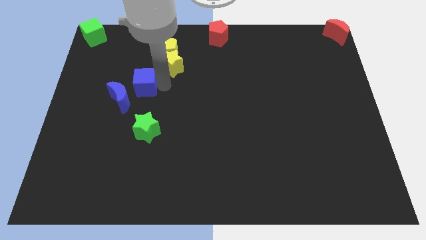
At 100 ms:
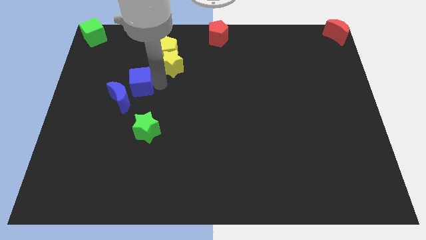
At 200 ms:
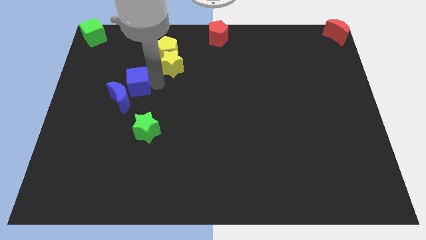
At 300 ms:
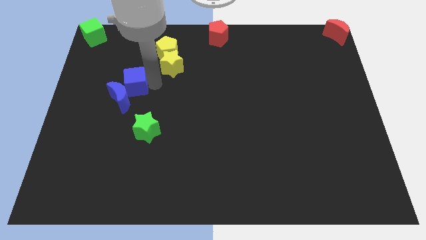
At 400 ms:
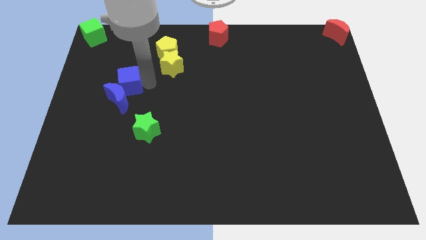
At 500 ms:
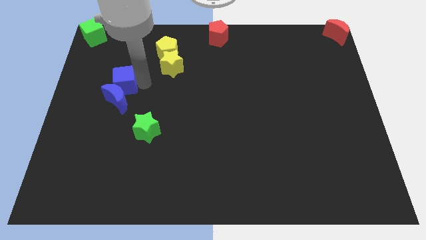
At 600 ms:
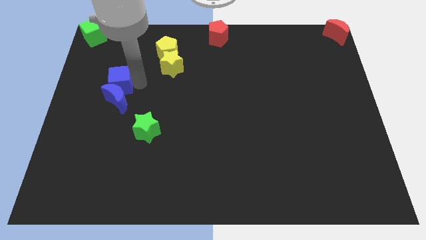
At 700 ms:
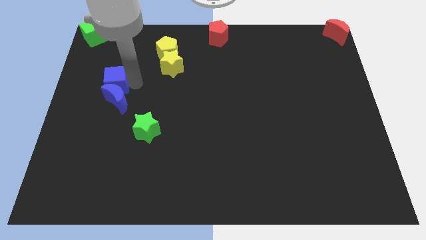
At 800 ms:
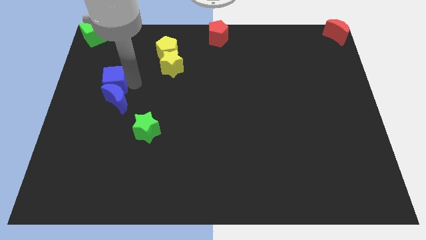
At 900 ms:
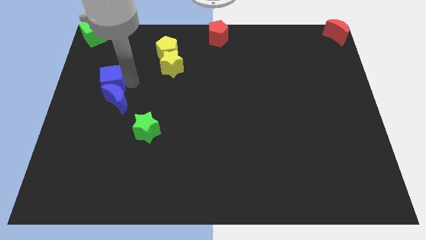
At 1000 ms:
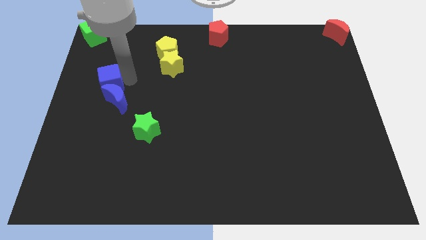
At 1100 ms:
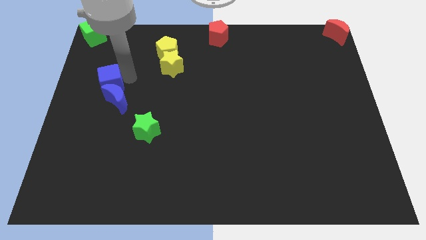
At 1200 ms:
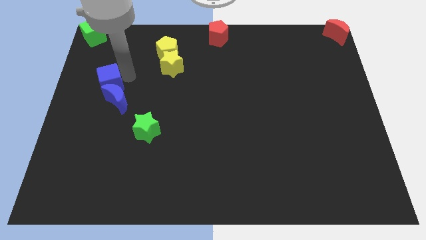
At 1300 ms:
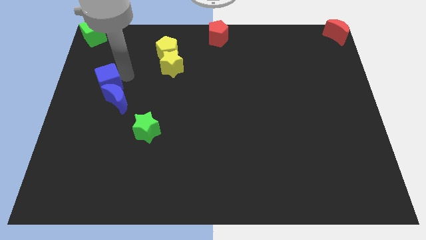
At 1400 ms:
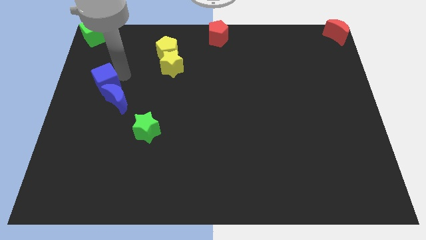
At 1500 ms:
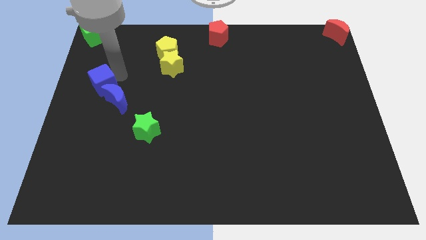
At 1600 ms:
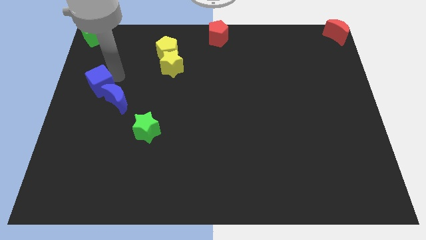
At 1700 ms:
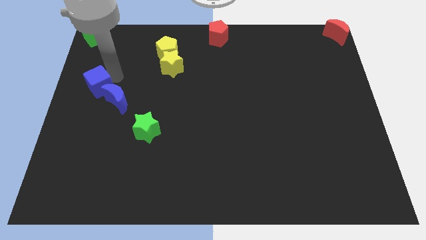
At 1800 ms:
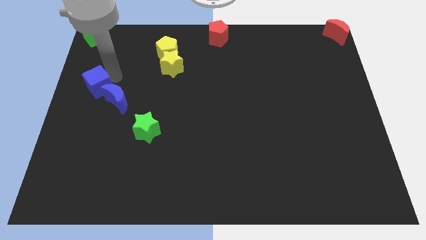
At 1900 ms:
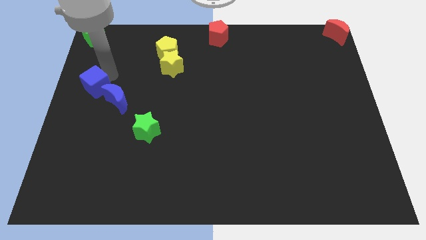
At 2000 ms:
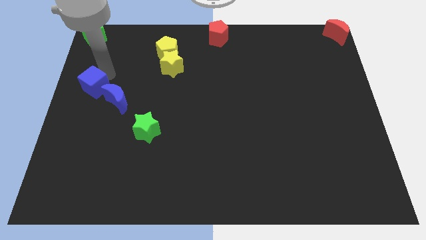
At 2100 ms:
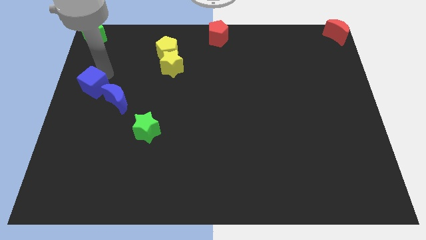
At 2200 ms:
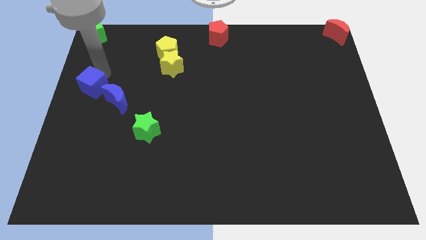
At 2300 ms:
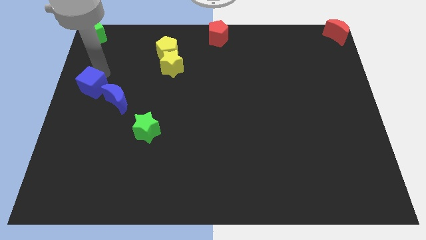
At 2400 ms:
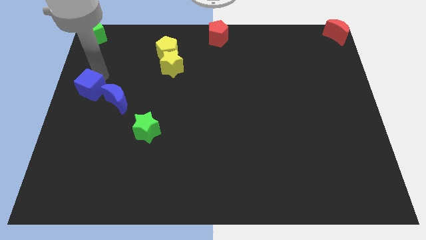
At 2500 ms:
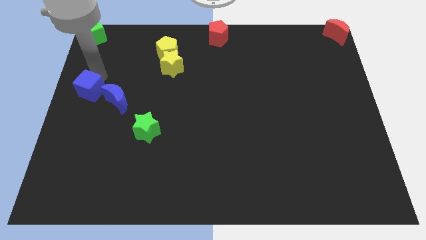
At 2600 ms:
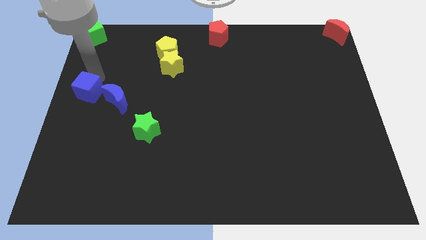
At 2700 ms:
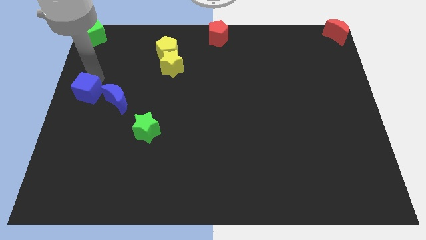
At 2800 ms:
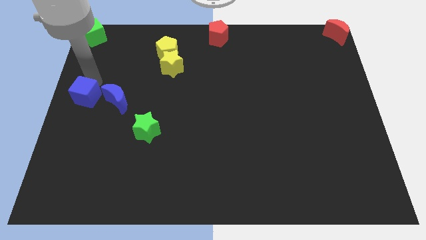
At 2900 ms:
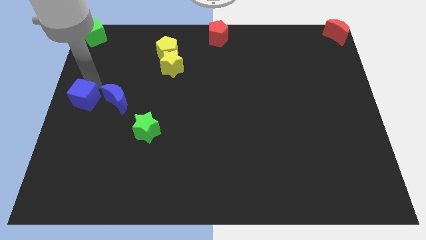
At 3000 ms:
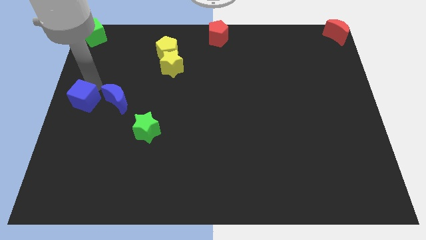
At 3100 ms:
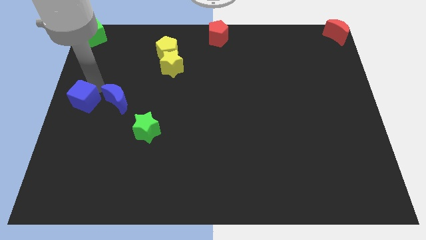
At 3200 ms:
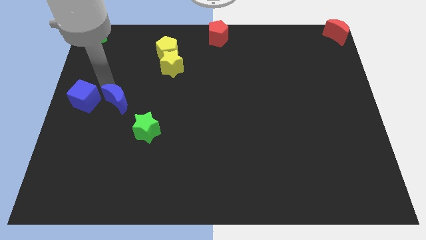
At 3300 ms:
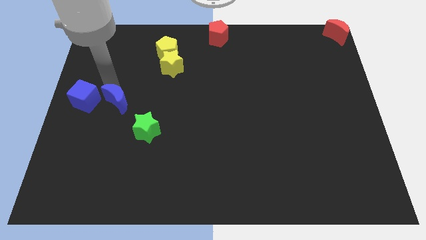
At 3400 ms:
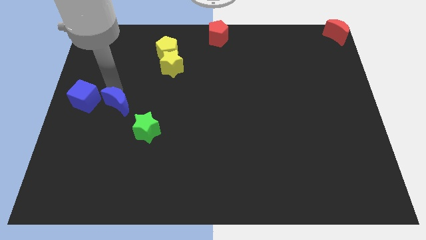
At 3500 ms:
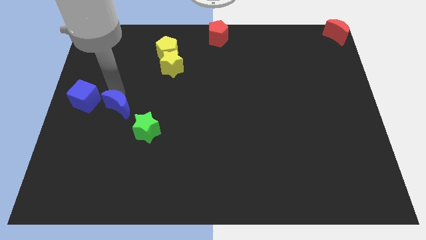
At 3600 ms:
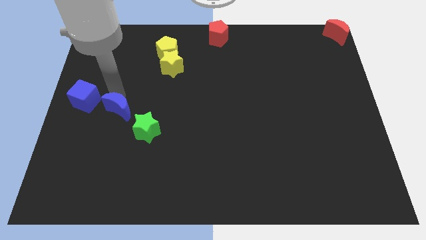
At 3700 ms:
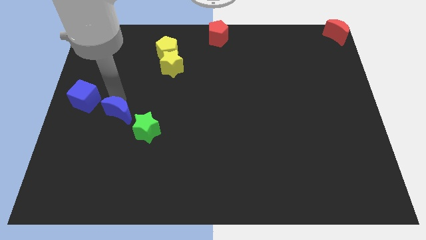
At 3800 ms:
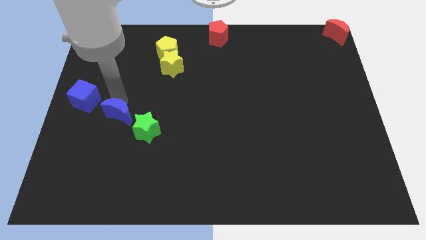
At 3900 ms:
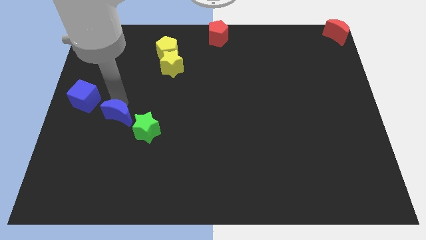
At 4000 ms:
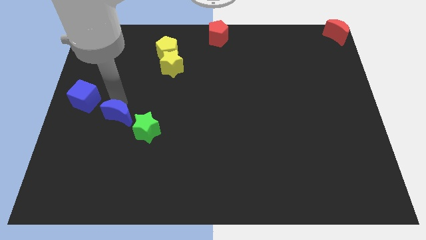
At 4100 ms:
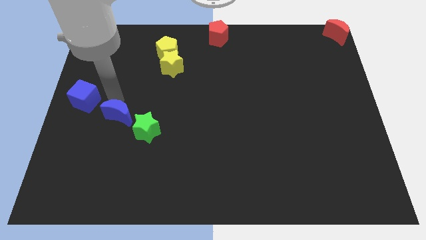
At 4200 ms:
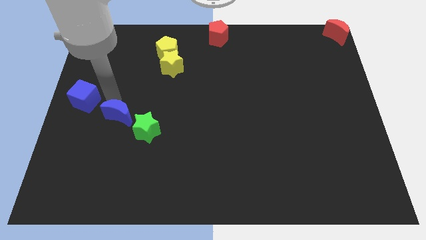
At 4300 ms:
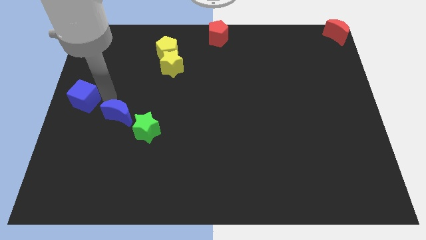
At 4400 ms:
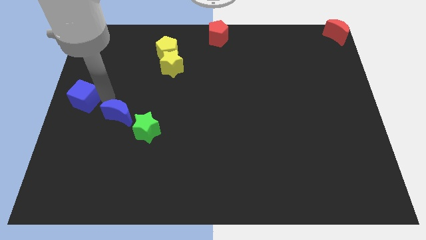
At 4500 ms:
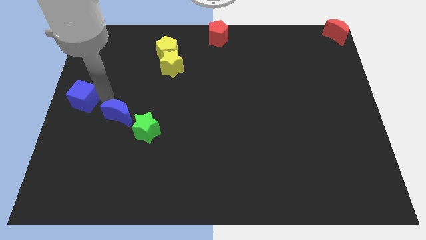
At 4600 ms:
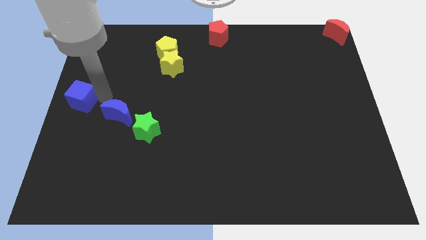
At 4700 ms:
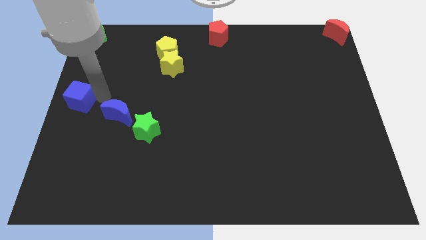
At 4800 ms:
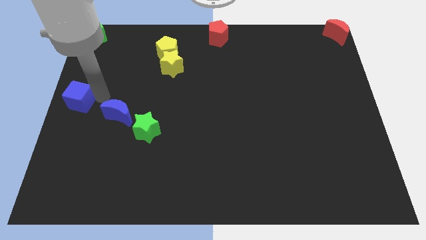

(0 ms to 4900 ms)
place the blue cube left to the blue crescent

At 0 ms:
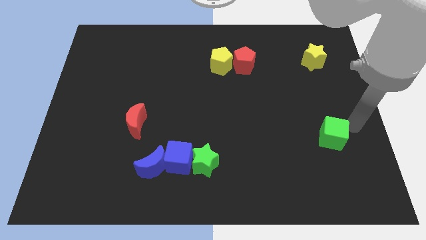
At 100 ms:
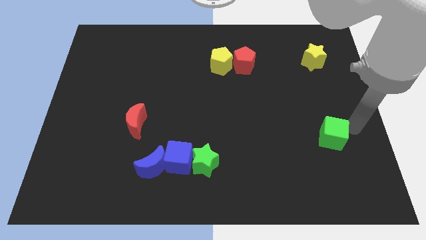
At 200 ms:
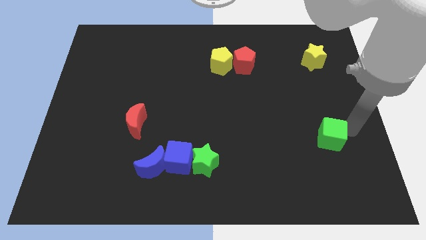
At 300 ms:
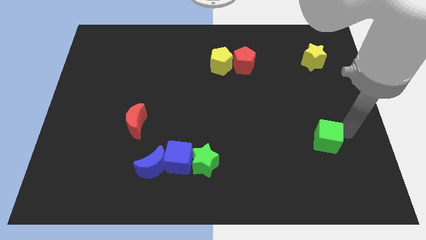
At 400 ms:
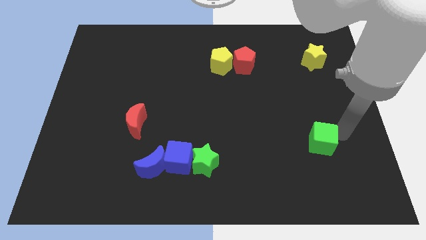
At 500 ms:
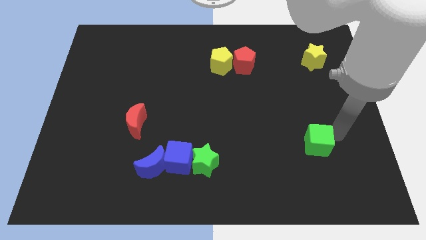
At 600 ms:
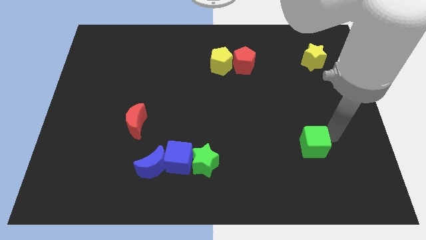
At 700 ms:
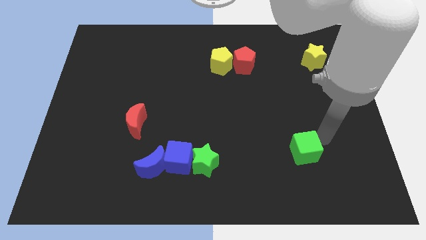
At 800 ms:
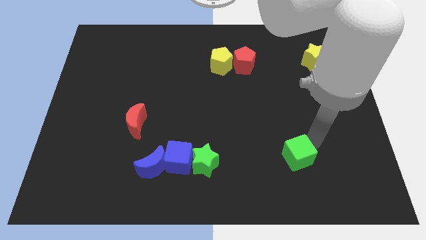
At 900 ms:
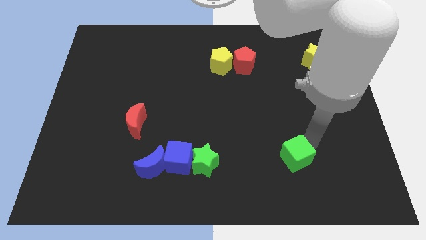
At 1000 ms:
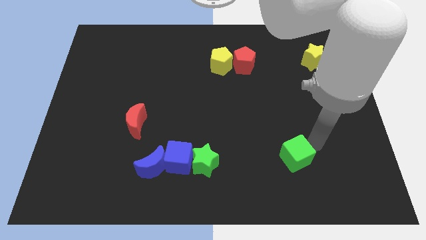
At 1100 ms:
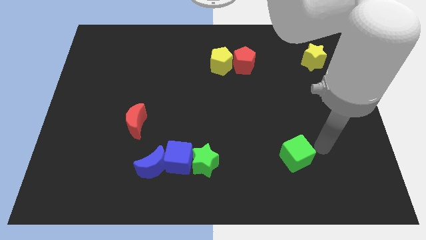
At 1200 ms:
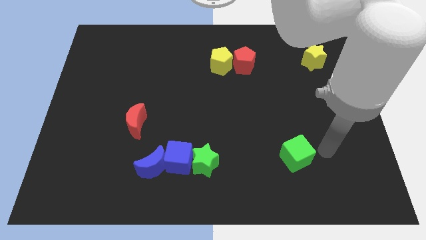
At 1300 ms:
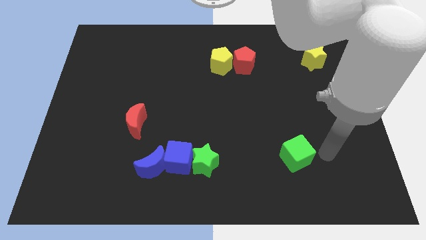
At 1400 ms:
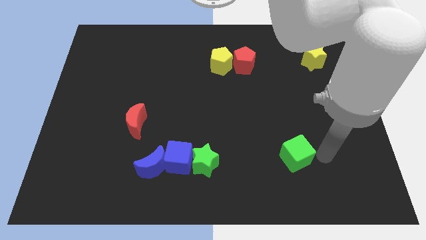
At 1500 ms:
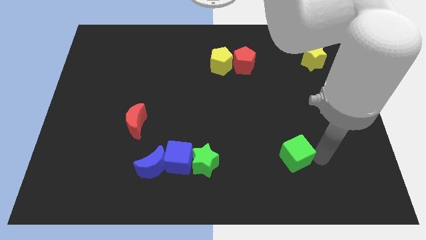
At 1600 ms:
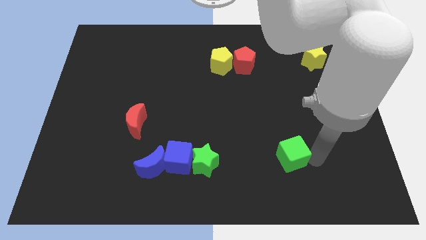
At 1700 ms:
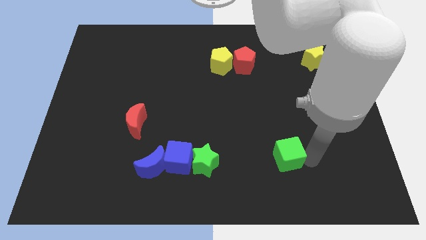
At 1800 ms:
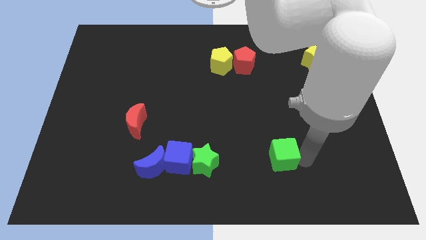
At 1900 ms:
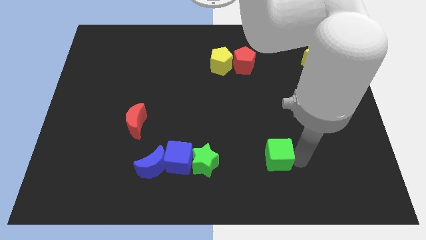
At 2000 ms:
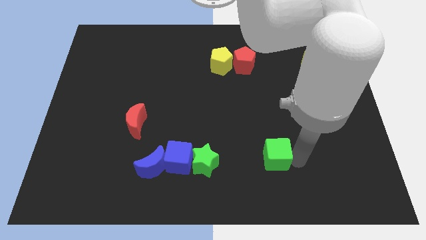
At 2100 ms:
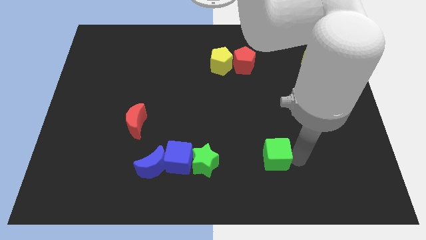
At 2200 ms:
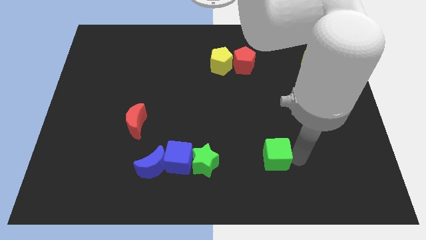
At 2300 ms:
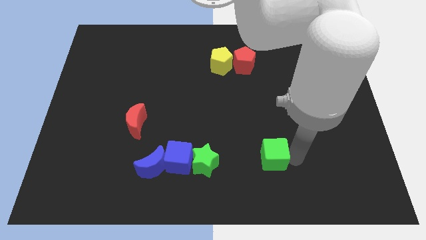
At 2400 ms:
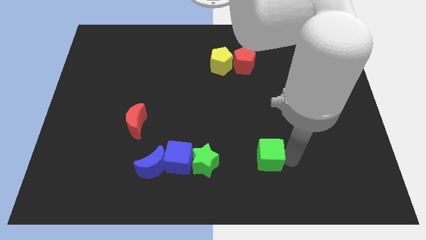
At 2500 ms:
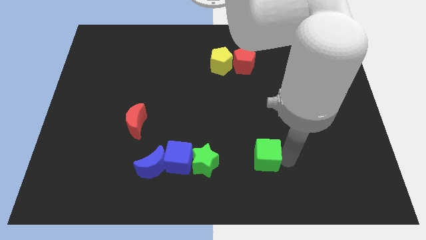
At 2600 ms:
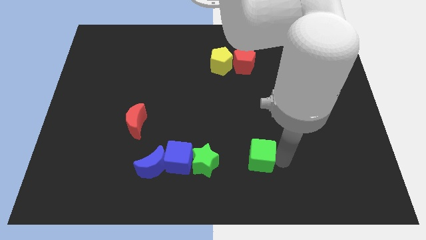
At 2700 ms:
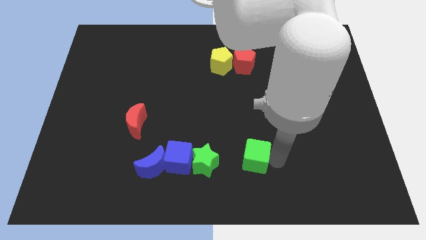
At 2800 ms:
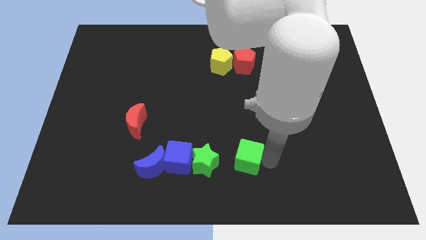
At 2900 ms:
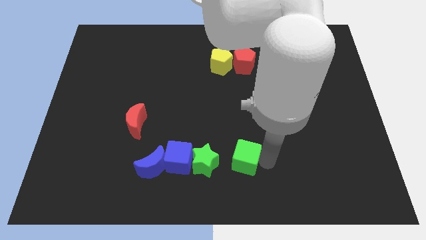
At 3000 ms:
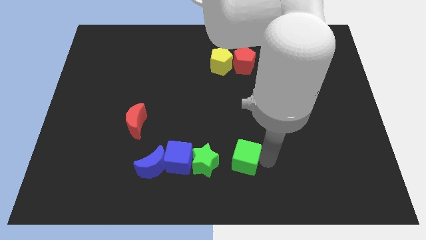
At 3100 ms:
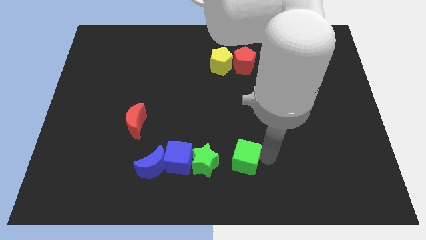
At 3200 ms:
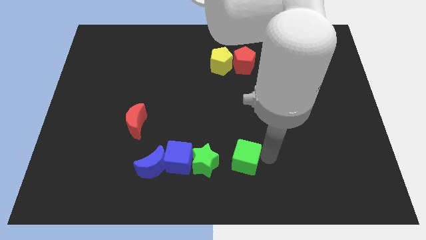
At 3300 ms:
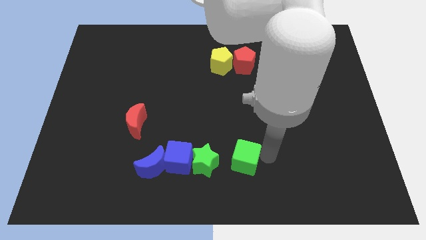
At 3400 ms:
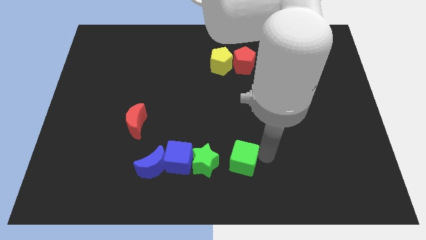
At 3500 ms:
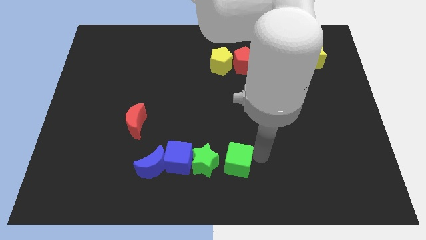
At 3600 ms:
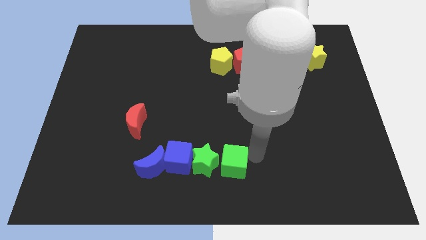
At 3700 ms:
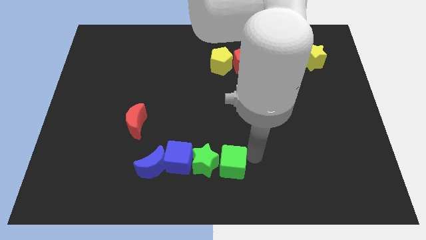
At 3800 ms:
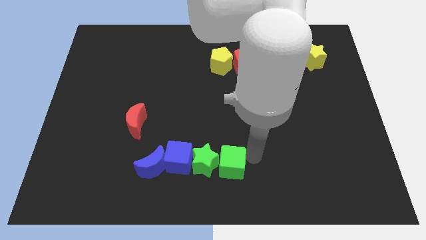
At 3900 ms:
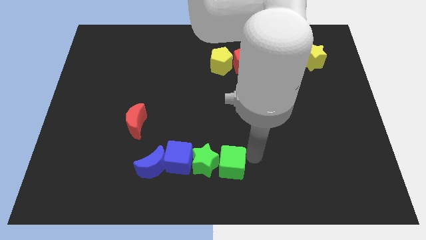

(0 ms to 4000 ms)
move the green cube to the right of the green star

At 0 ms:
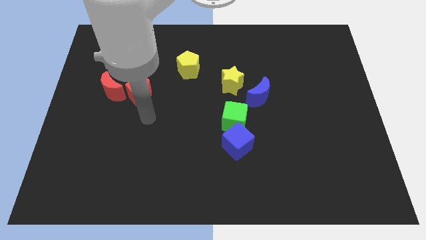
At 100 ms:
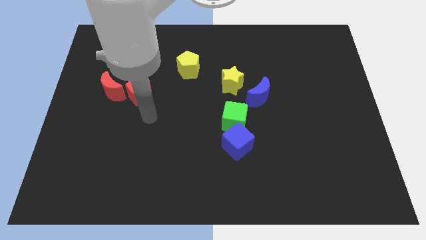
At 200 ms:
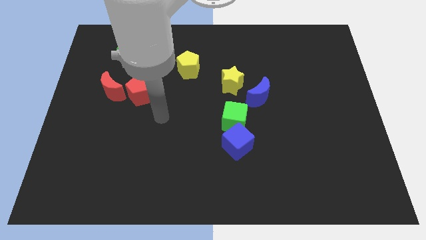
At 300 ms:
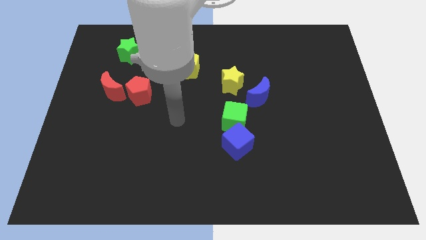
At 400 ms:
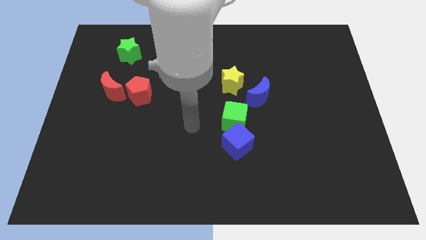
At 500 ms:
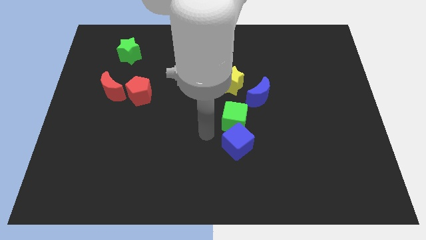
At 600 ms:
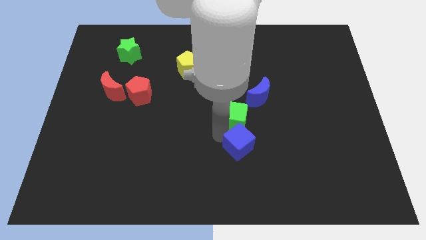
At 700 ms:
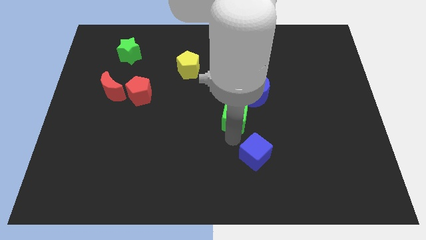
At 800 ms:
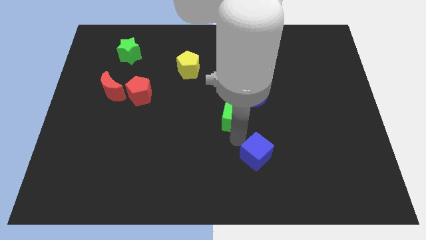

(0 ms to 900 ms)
separate the blue cube from green cube
